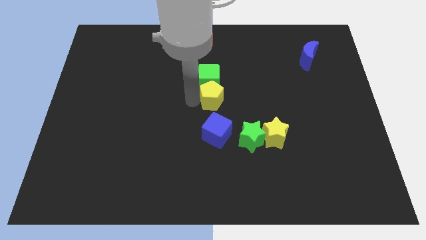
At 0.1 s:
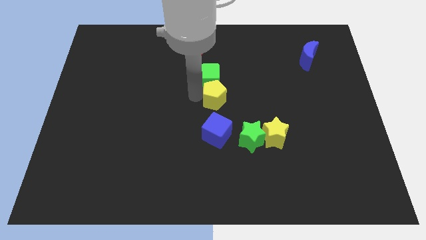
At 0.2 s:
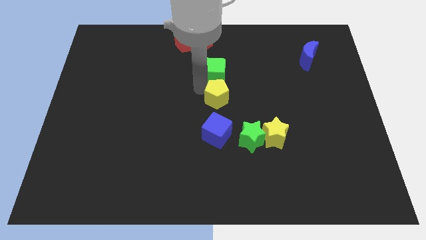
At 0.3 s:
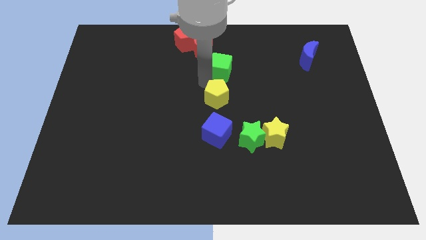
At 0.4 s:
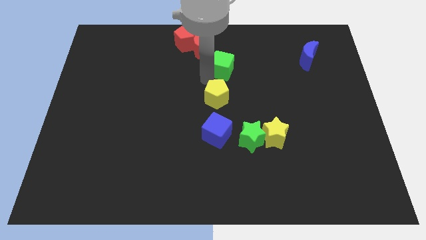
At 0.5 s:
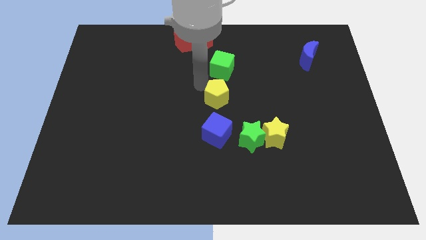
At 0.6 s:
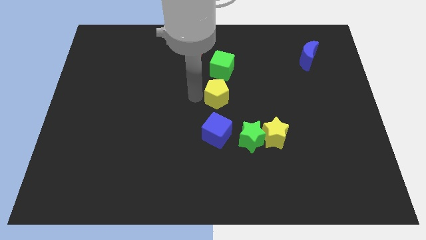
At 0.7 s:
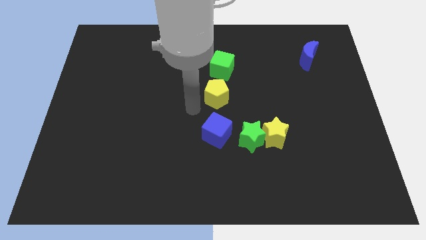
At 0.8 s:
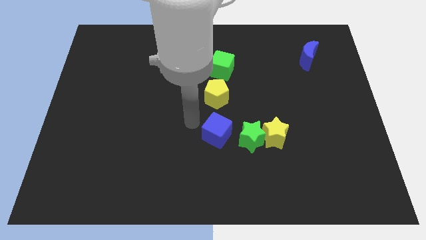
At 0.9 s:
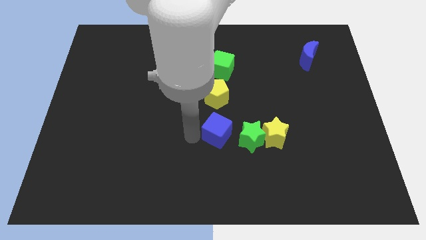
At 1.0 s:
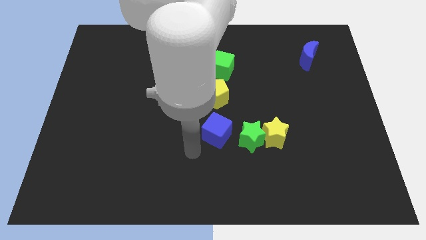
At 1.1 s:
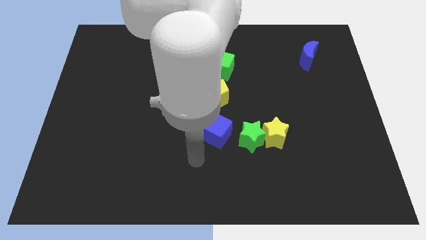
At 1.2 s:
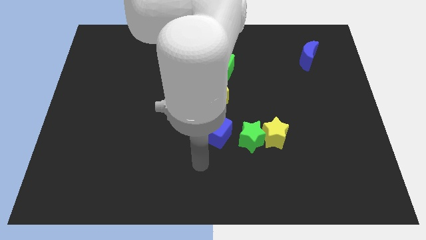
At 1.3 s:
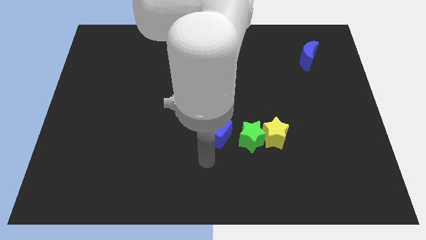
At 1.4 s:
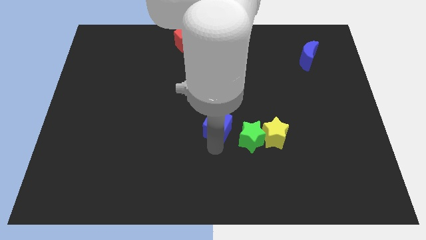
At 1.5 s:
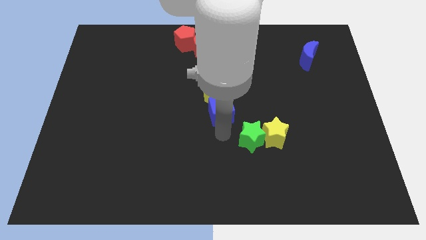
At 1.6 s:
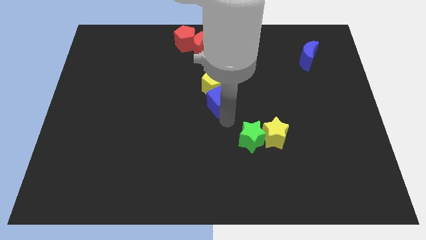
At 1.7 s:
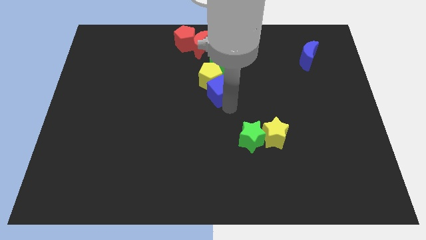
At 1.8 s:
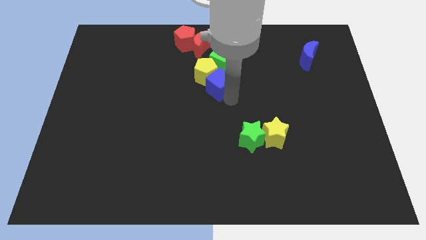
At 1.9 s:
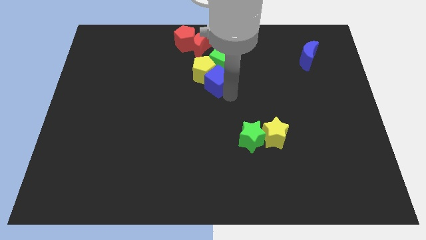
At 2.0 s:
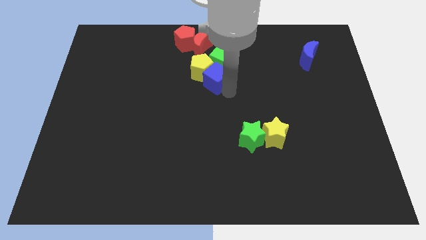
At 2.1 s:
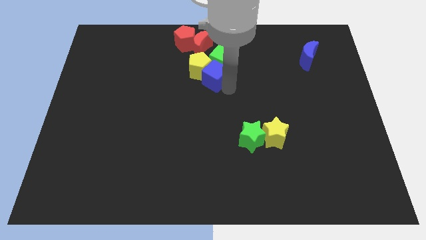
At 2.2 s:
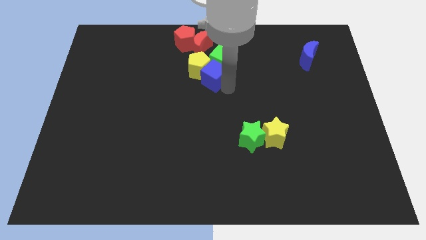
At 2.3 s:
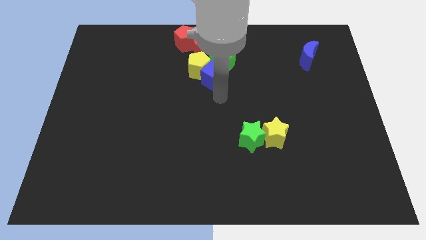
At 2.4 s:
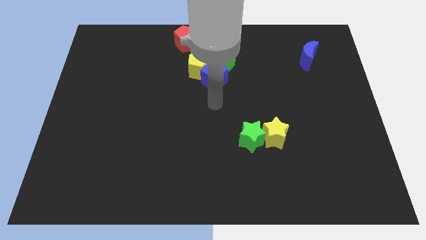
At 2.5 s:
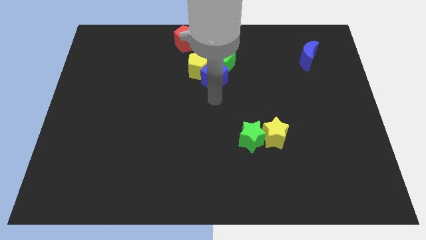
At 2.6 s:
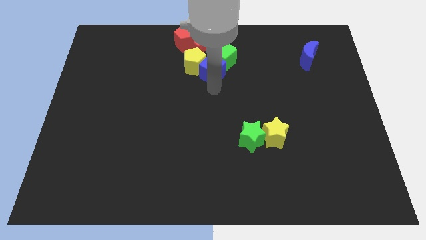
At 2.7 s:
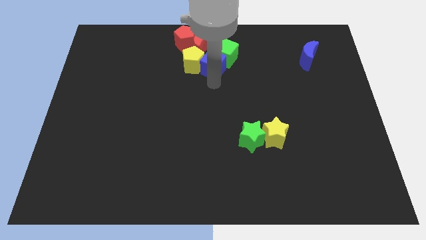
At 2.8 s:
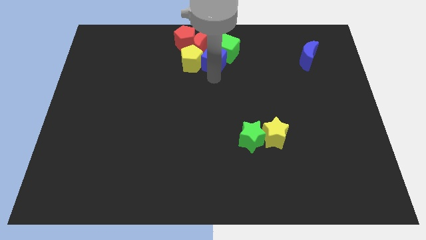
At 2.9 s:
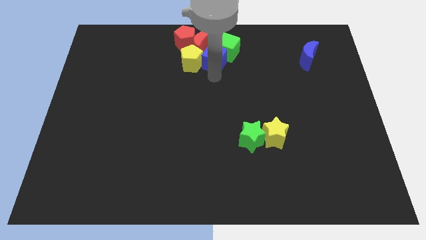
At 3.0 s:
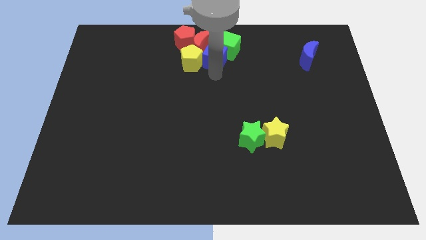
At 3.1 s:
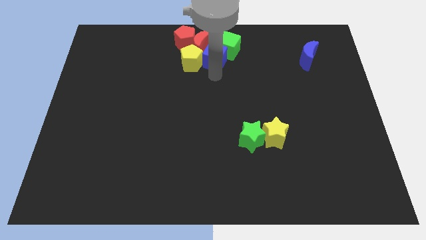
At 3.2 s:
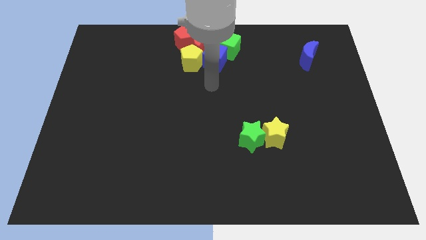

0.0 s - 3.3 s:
push blue cubegreen cube and yellow pentagon towards red blocks

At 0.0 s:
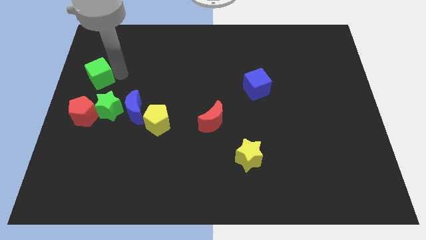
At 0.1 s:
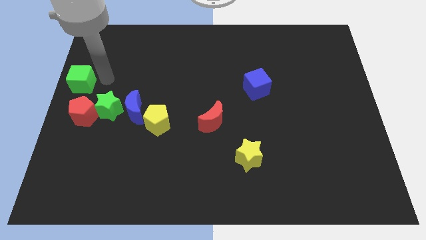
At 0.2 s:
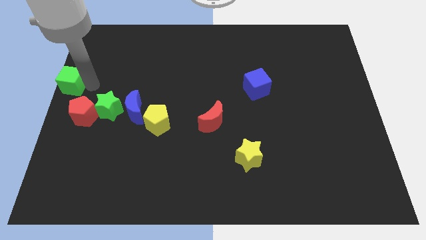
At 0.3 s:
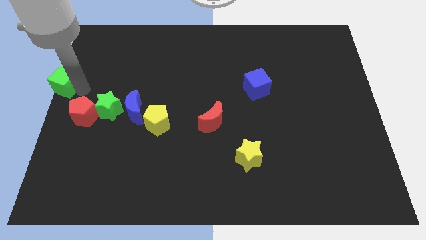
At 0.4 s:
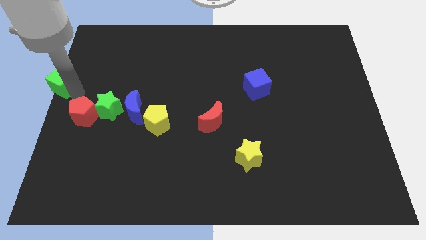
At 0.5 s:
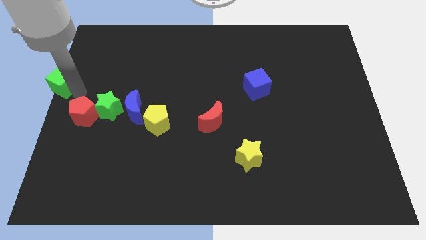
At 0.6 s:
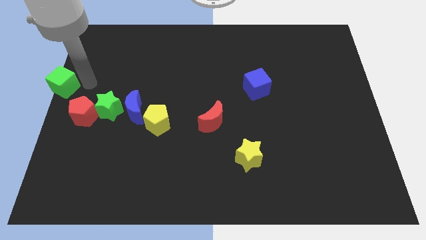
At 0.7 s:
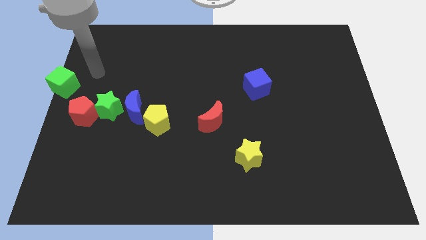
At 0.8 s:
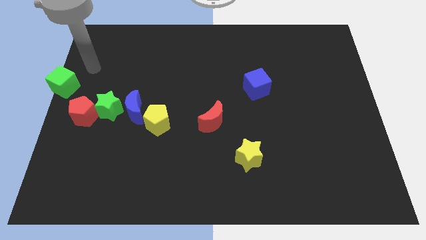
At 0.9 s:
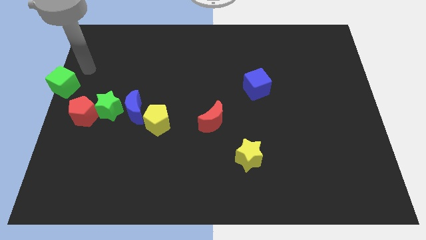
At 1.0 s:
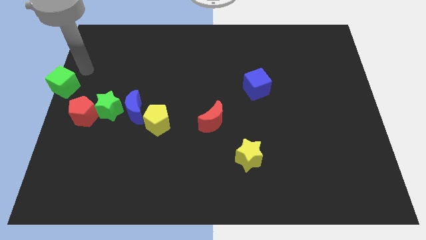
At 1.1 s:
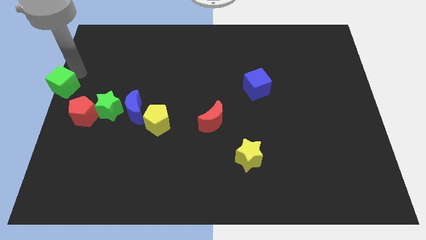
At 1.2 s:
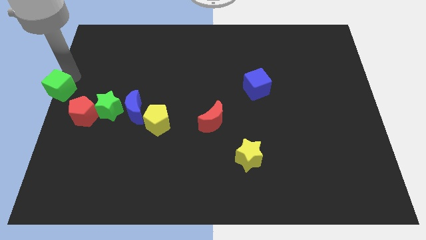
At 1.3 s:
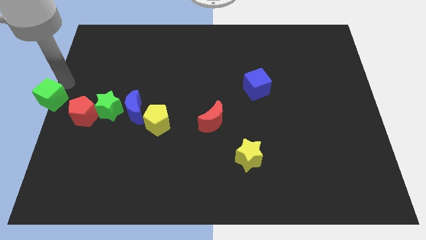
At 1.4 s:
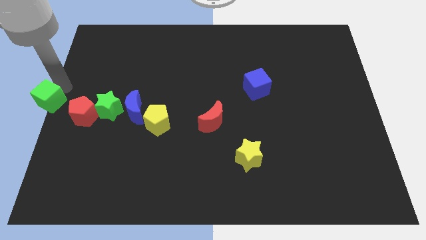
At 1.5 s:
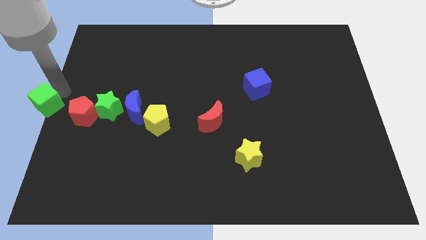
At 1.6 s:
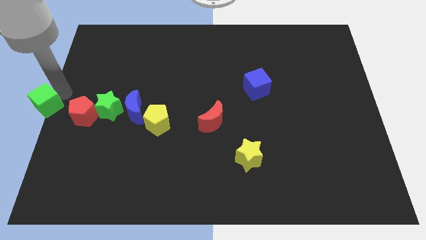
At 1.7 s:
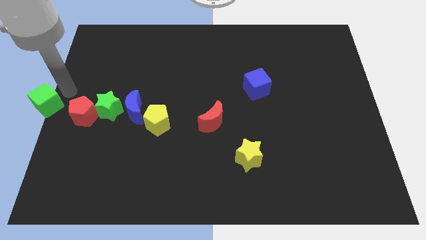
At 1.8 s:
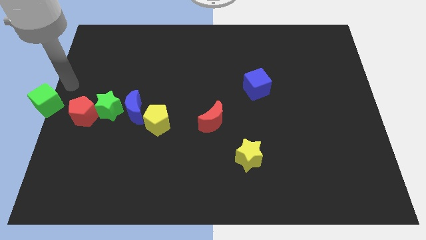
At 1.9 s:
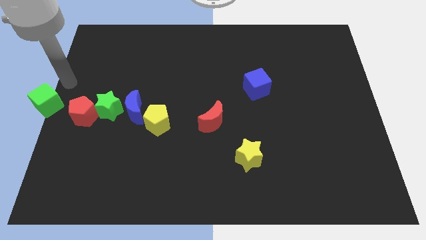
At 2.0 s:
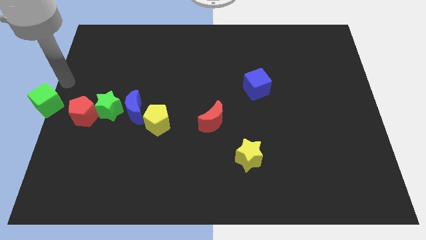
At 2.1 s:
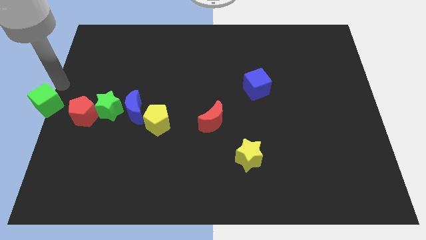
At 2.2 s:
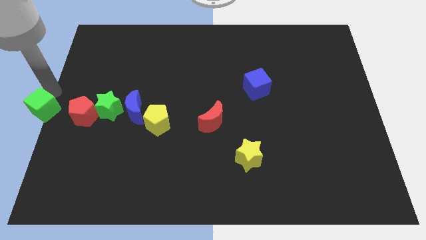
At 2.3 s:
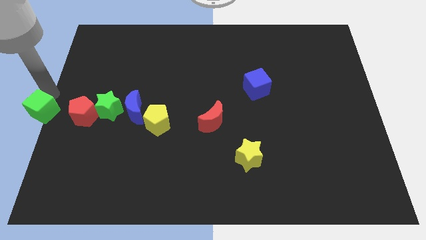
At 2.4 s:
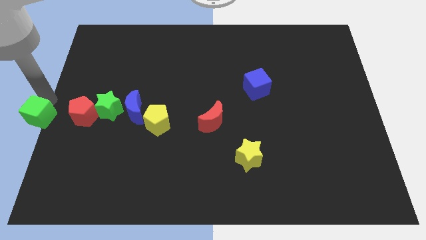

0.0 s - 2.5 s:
move the green cube to the center left of the board

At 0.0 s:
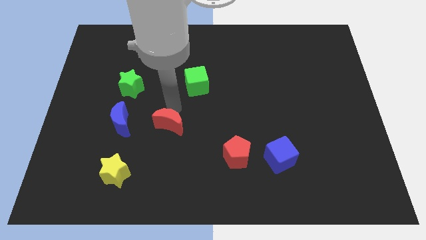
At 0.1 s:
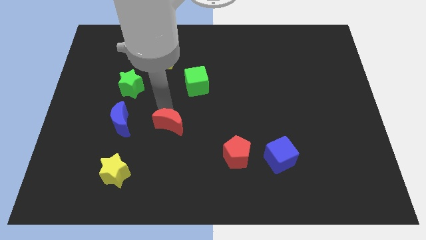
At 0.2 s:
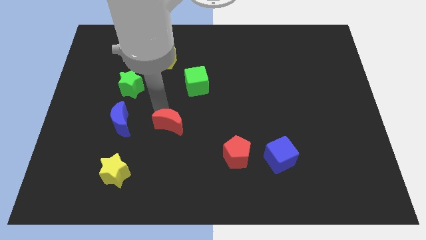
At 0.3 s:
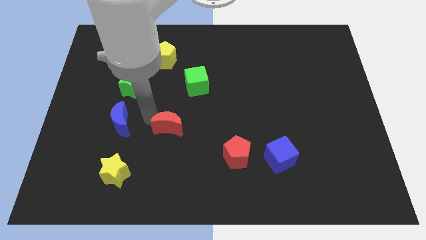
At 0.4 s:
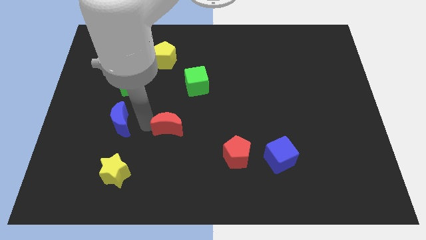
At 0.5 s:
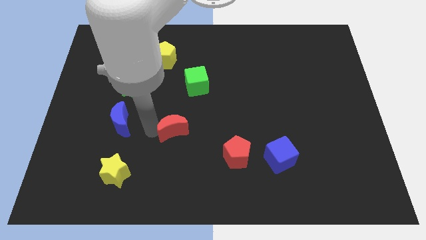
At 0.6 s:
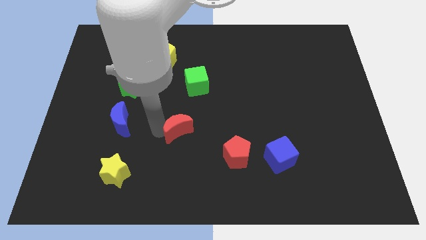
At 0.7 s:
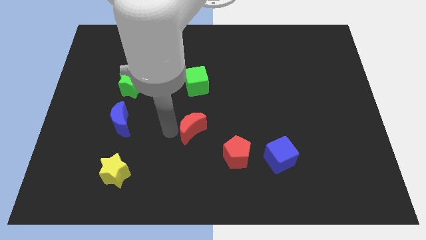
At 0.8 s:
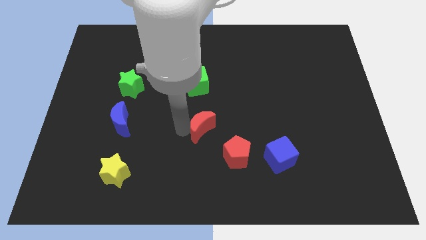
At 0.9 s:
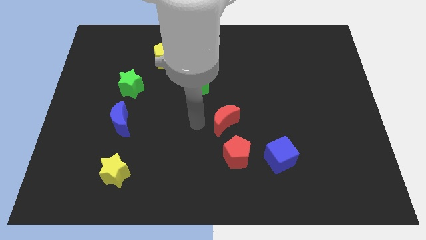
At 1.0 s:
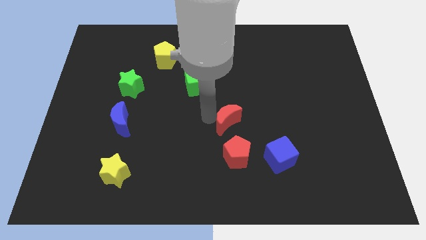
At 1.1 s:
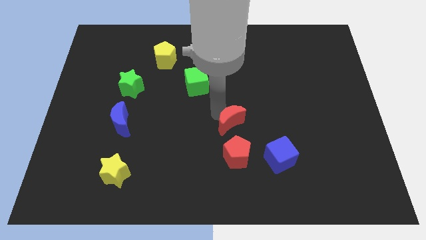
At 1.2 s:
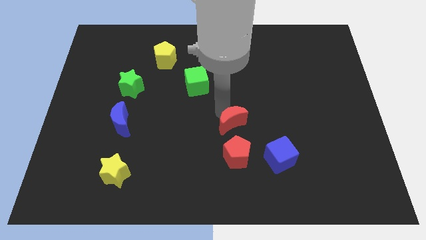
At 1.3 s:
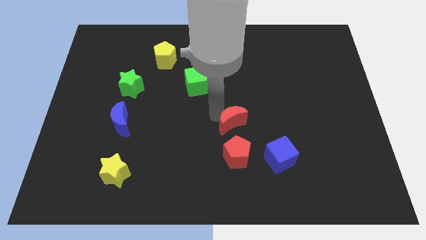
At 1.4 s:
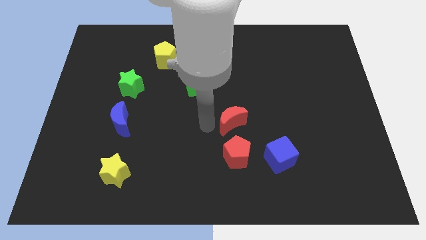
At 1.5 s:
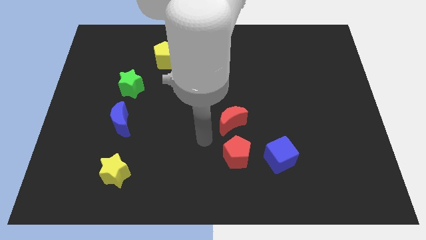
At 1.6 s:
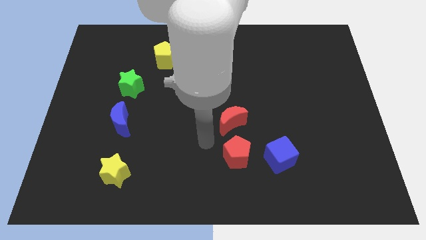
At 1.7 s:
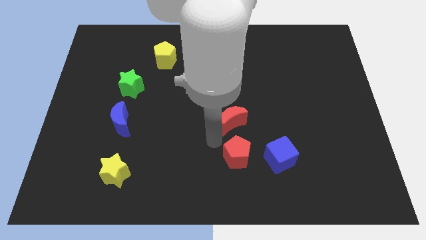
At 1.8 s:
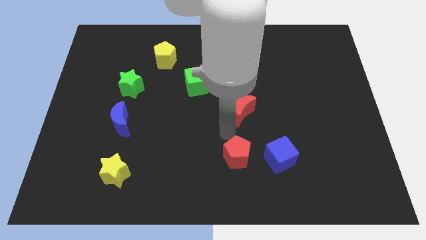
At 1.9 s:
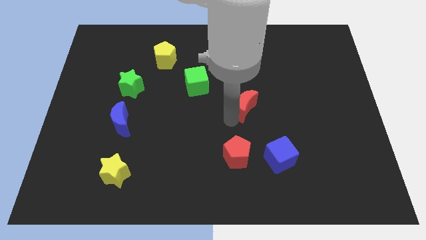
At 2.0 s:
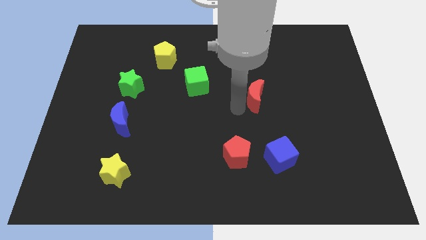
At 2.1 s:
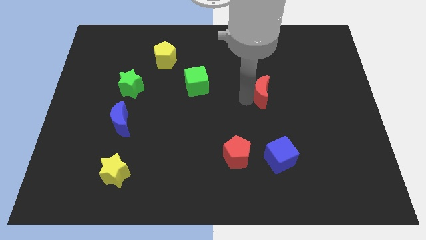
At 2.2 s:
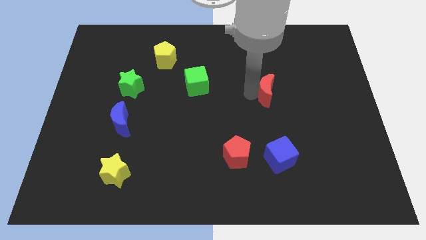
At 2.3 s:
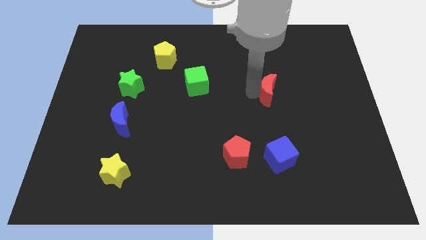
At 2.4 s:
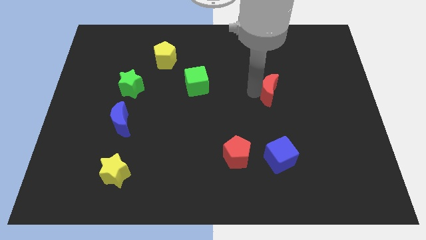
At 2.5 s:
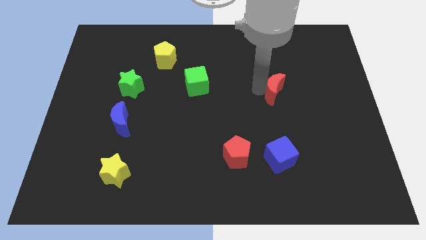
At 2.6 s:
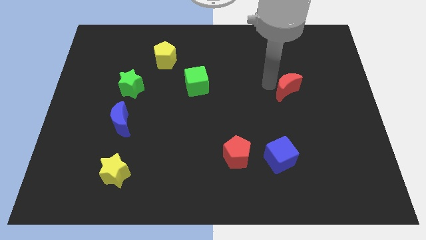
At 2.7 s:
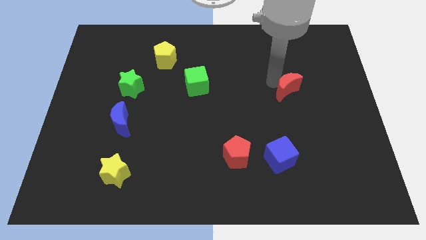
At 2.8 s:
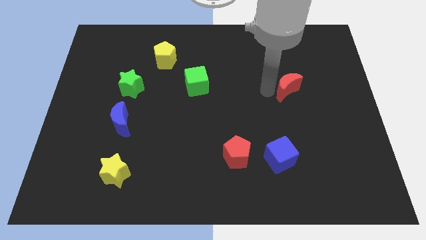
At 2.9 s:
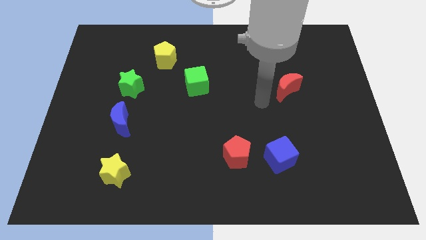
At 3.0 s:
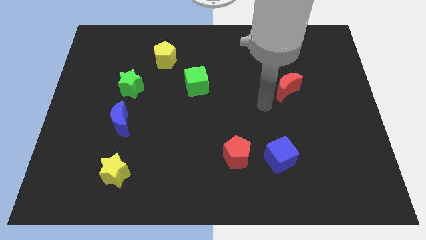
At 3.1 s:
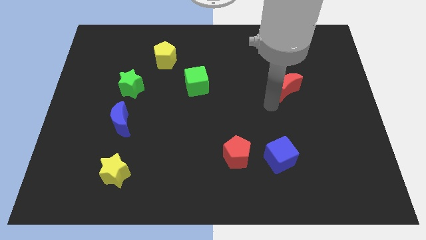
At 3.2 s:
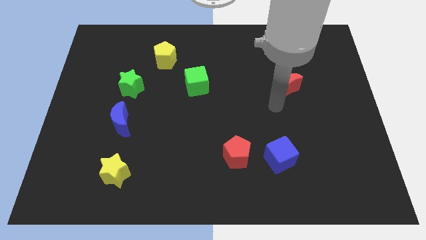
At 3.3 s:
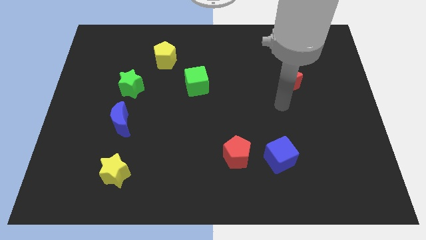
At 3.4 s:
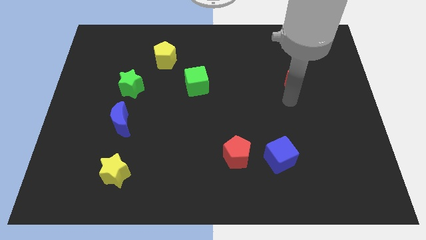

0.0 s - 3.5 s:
push the red crescent to the top right of the red pentagon
